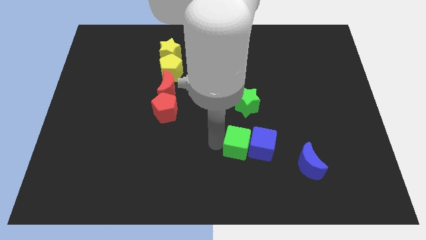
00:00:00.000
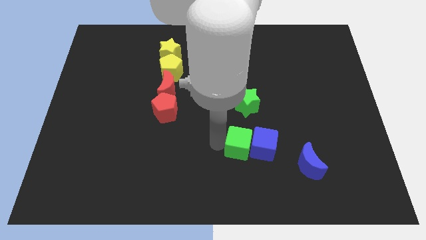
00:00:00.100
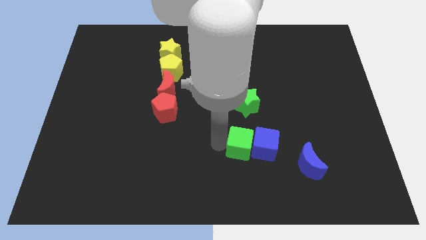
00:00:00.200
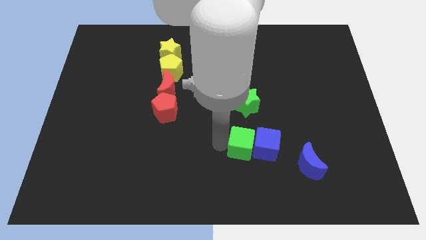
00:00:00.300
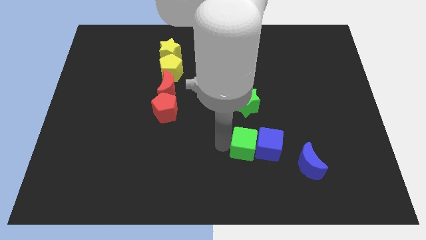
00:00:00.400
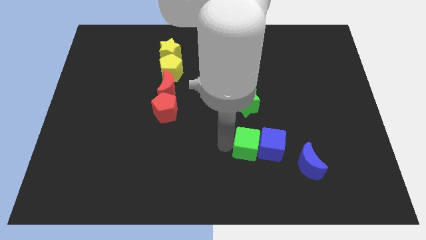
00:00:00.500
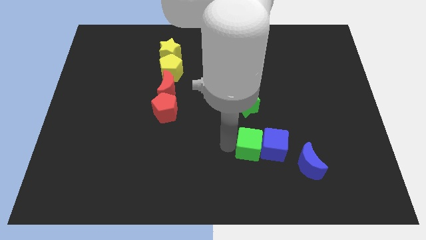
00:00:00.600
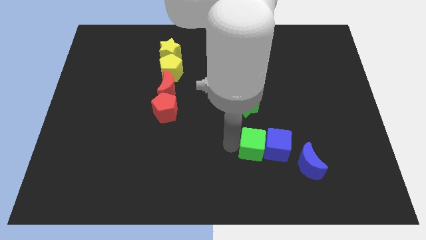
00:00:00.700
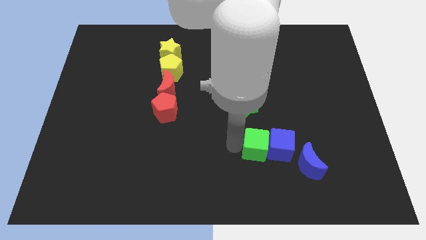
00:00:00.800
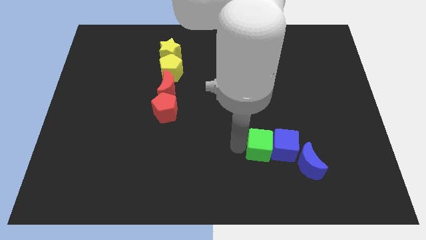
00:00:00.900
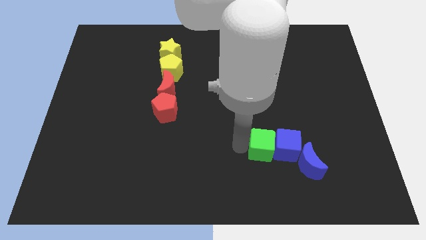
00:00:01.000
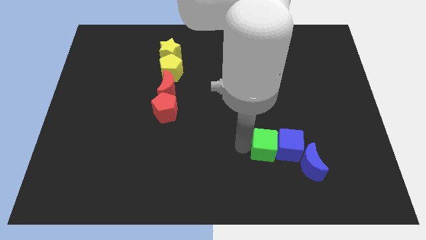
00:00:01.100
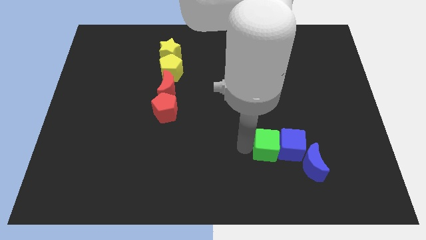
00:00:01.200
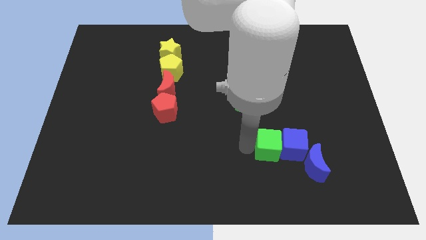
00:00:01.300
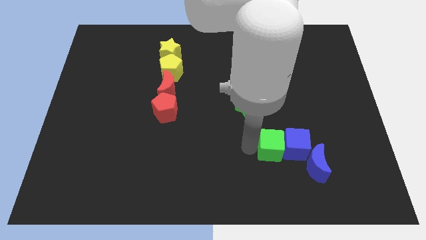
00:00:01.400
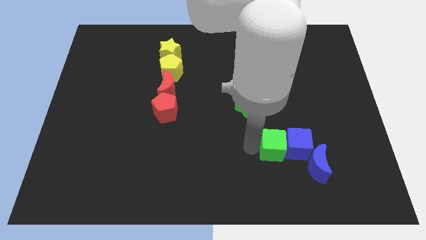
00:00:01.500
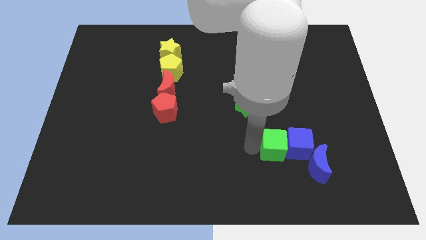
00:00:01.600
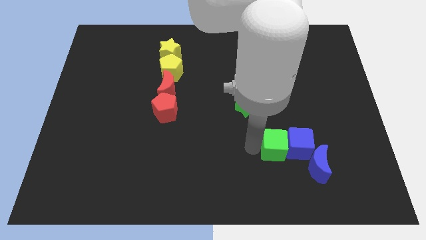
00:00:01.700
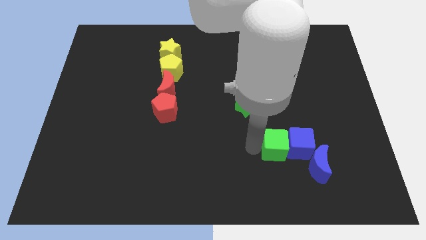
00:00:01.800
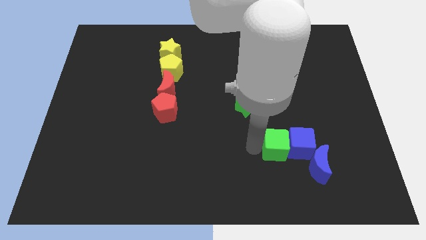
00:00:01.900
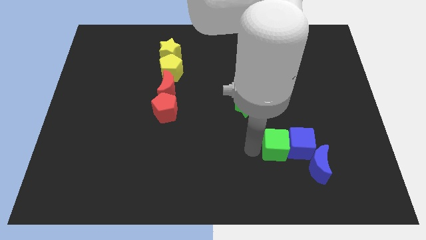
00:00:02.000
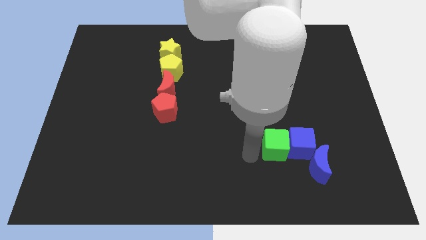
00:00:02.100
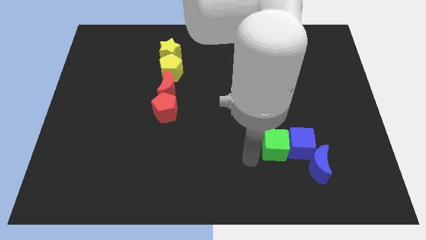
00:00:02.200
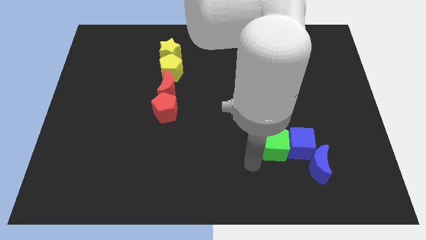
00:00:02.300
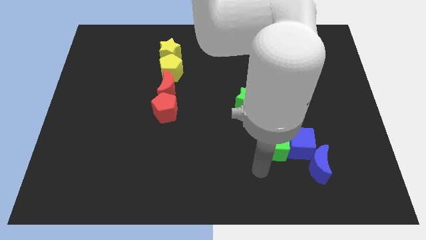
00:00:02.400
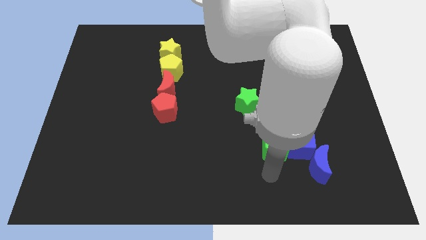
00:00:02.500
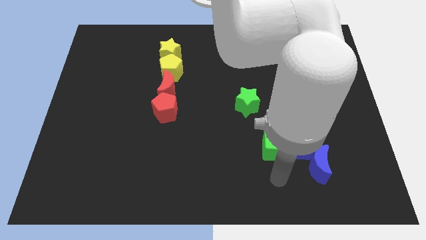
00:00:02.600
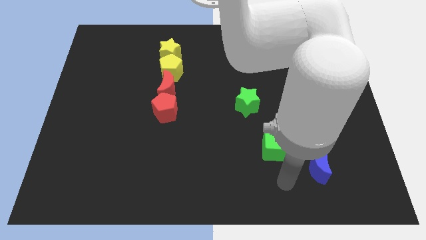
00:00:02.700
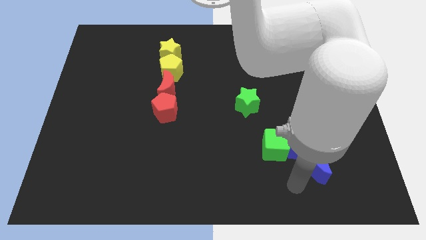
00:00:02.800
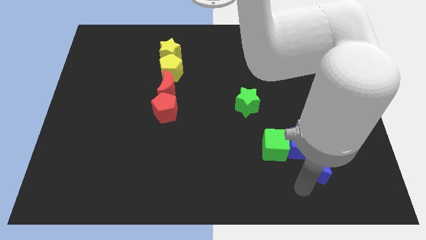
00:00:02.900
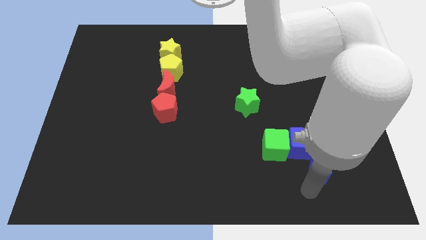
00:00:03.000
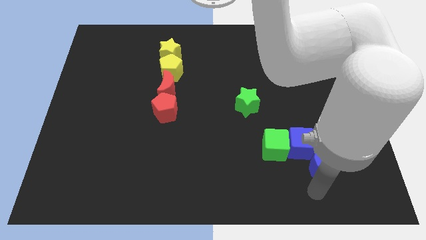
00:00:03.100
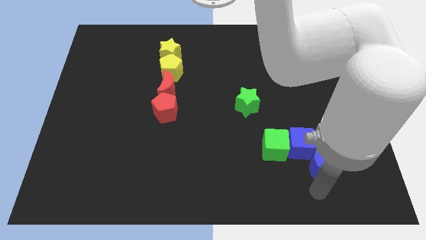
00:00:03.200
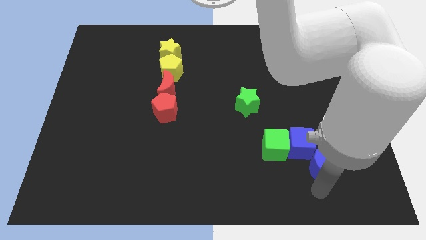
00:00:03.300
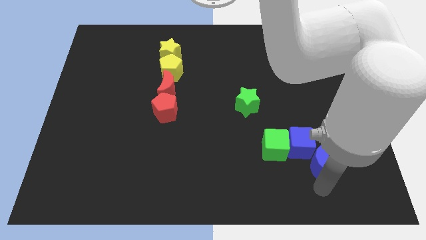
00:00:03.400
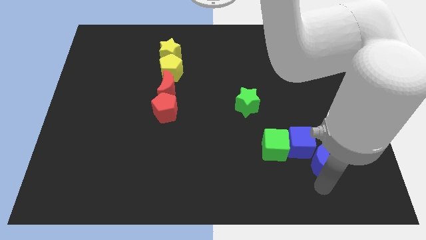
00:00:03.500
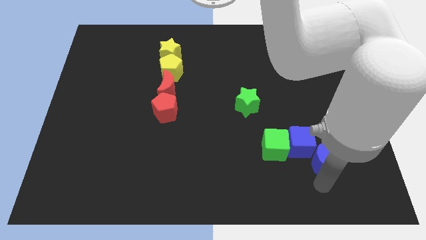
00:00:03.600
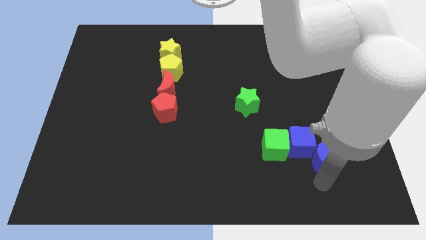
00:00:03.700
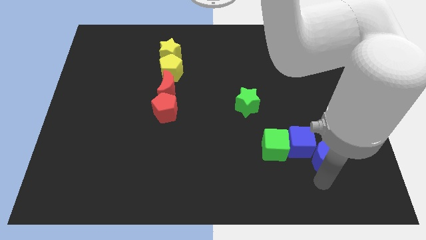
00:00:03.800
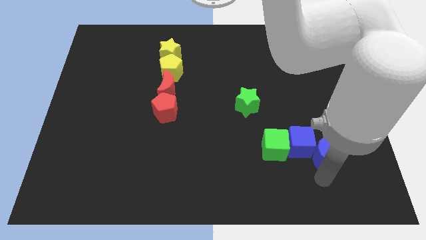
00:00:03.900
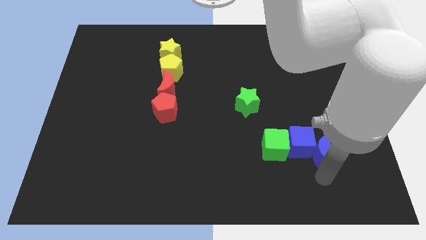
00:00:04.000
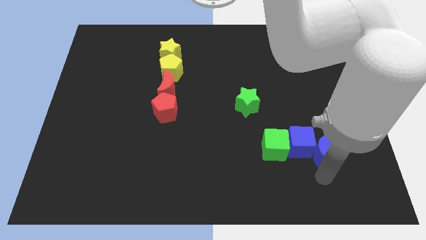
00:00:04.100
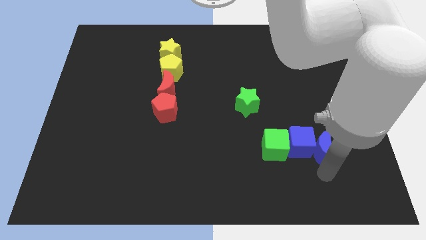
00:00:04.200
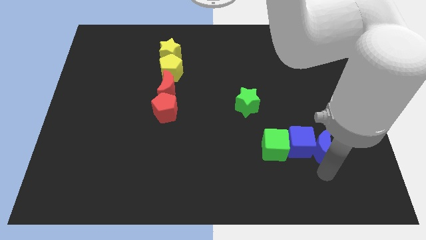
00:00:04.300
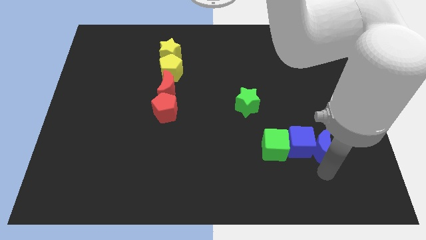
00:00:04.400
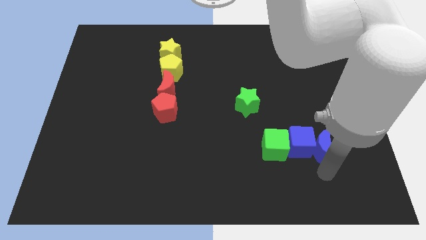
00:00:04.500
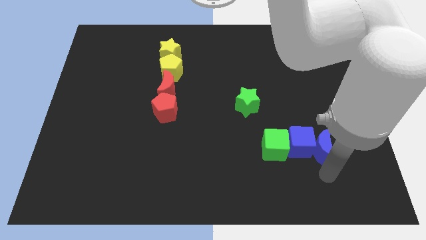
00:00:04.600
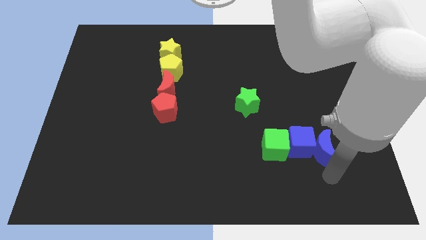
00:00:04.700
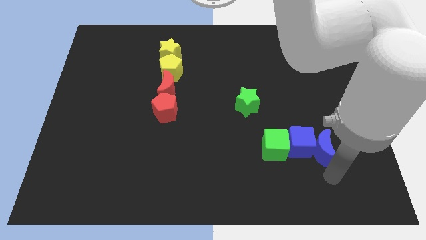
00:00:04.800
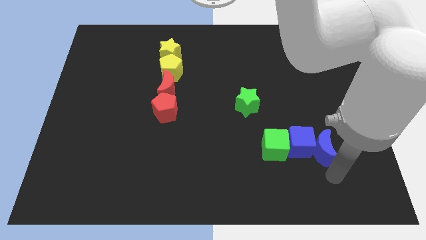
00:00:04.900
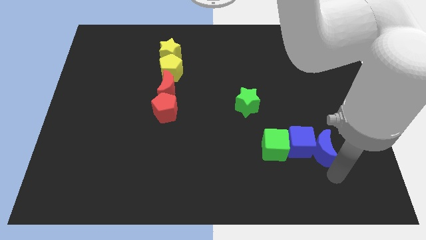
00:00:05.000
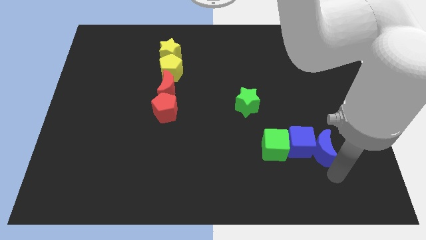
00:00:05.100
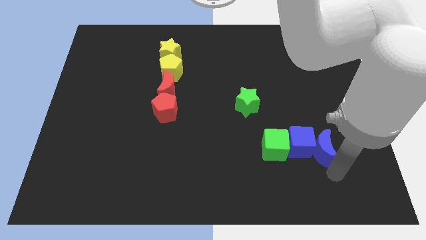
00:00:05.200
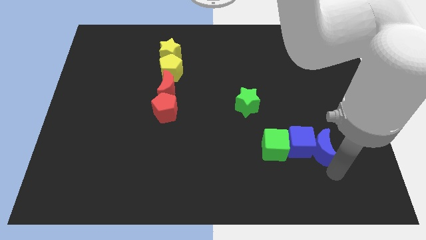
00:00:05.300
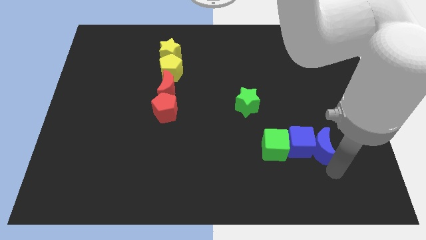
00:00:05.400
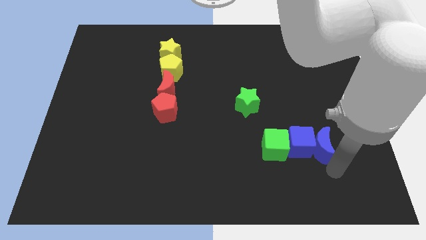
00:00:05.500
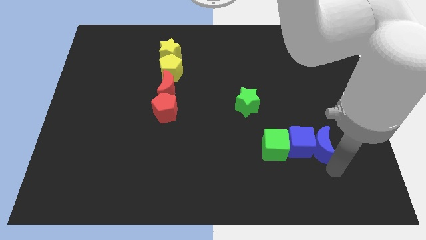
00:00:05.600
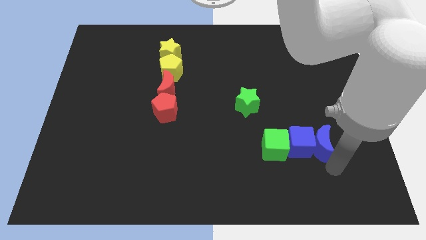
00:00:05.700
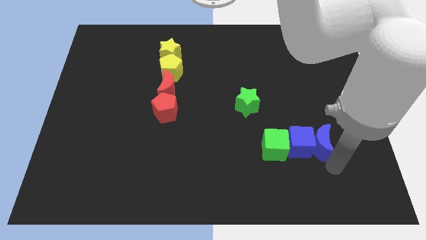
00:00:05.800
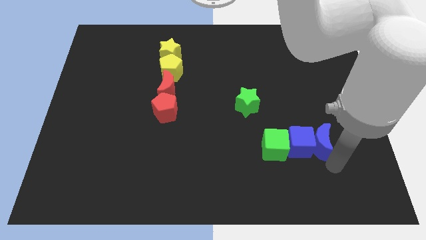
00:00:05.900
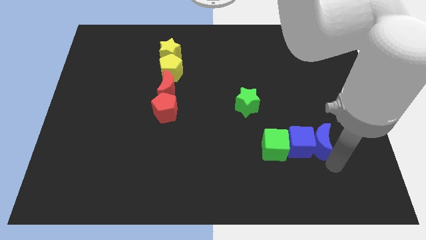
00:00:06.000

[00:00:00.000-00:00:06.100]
move the blue moon close to the blue cube

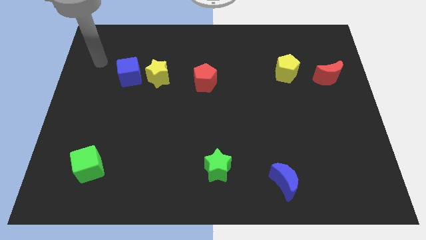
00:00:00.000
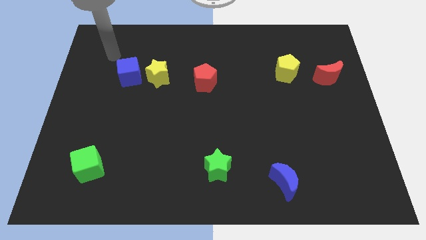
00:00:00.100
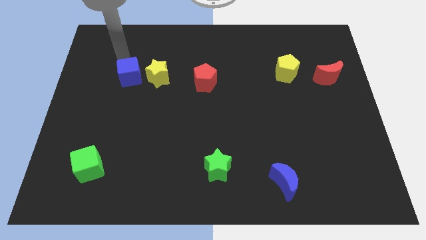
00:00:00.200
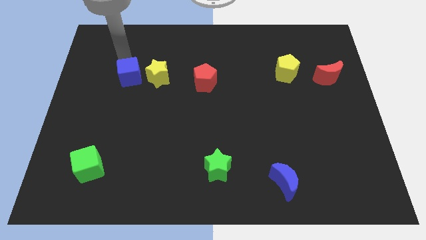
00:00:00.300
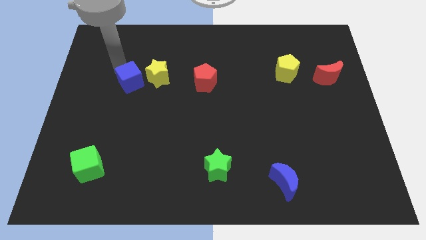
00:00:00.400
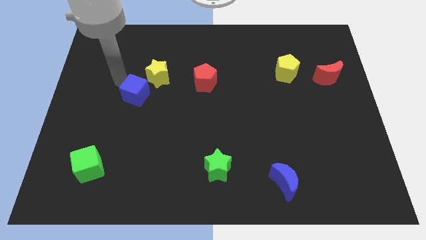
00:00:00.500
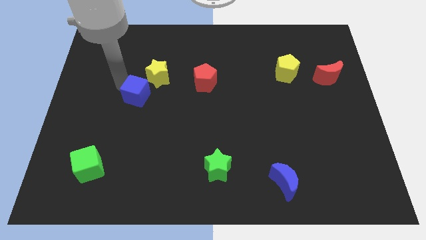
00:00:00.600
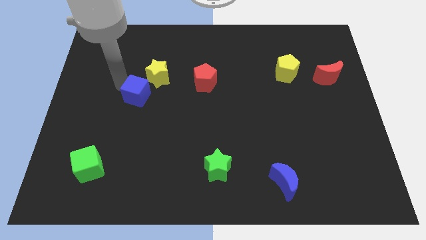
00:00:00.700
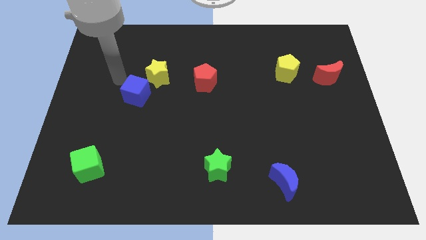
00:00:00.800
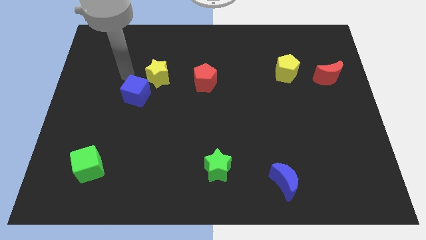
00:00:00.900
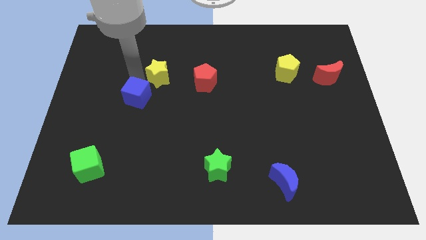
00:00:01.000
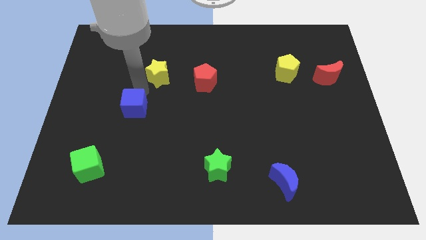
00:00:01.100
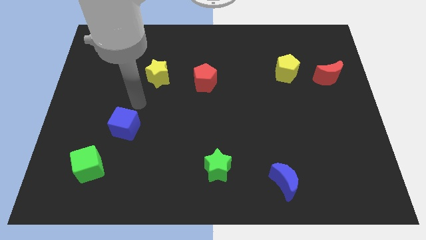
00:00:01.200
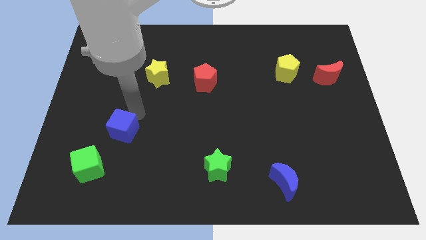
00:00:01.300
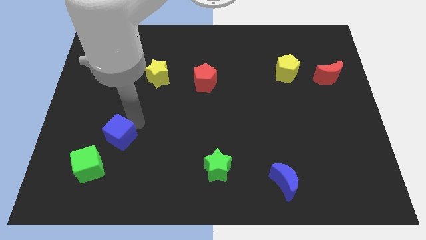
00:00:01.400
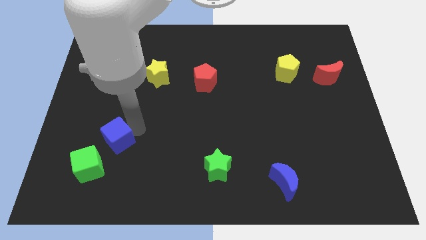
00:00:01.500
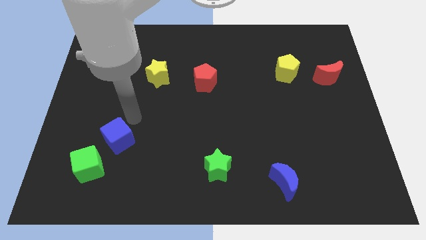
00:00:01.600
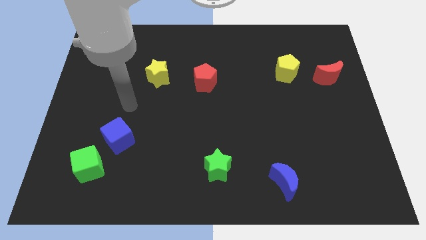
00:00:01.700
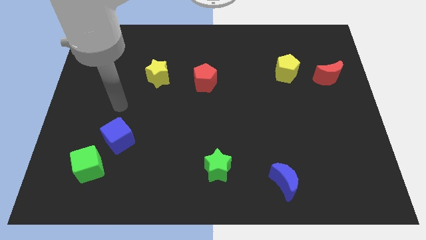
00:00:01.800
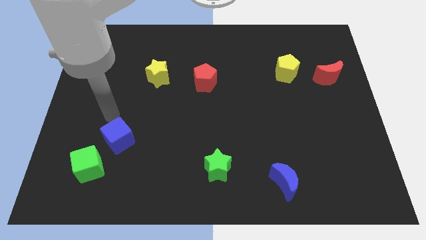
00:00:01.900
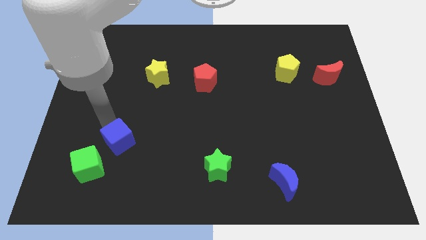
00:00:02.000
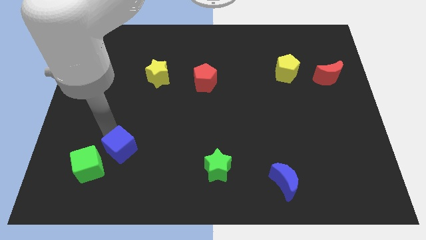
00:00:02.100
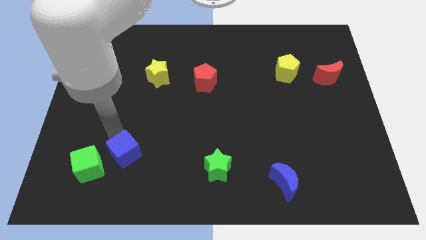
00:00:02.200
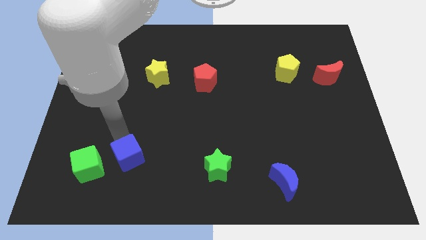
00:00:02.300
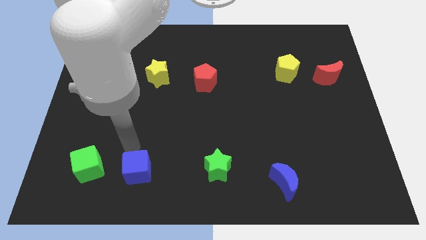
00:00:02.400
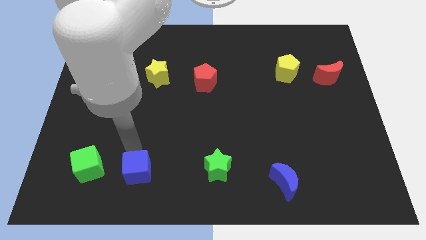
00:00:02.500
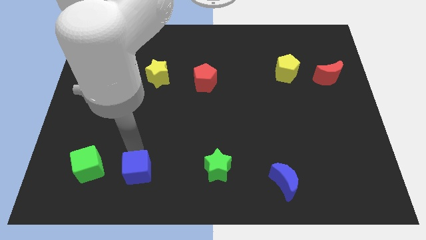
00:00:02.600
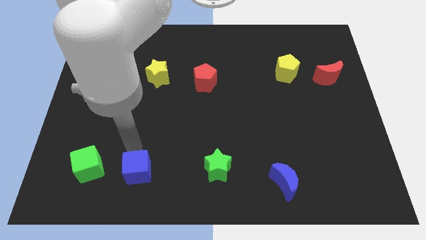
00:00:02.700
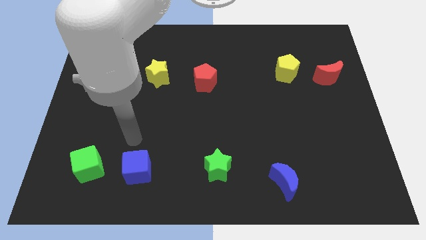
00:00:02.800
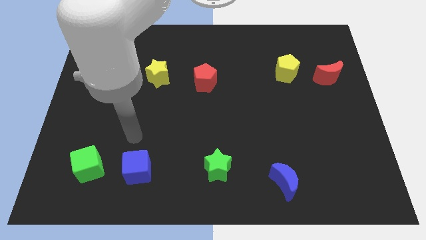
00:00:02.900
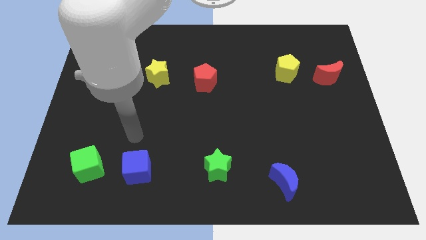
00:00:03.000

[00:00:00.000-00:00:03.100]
place the blue cube in between the green blocks
